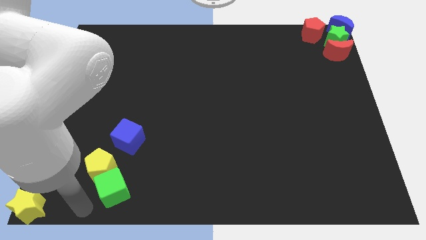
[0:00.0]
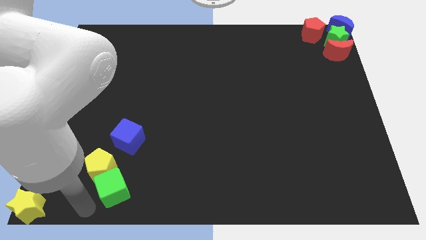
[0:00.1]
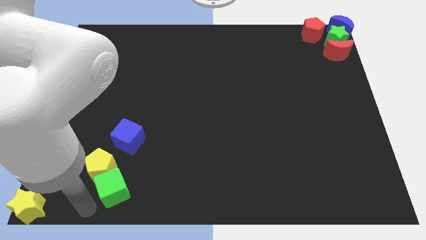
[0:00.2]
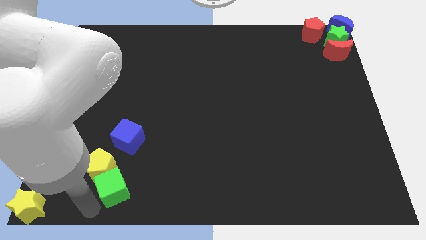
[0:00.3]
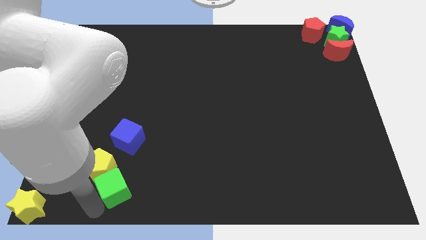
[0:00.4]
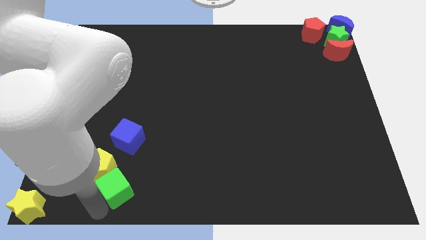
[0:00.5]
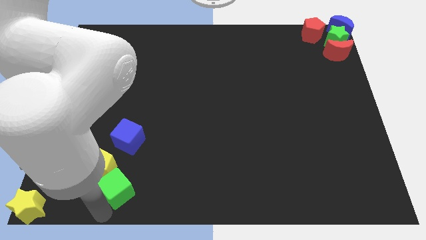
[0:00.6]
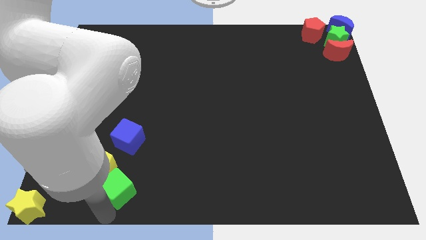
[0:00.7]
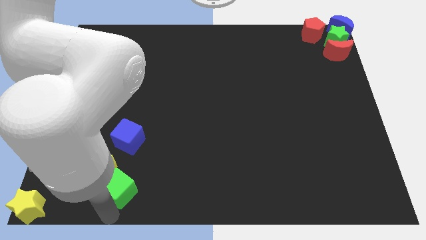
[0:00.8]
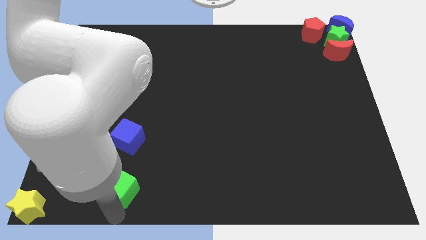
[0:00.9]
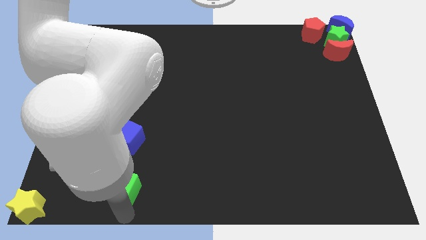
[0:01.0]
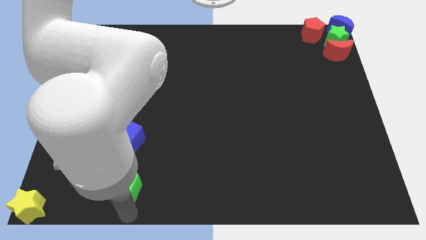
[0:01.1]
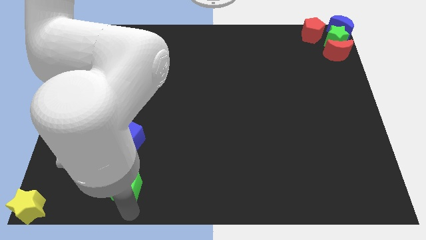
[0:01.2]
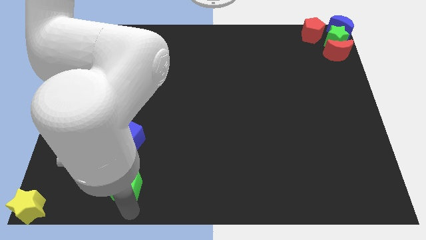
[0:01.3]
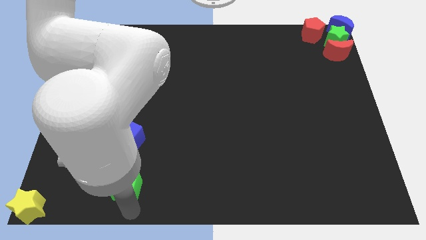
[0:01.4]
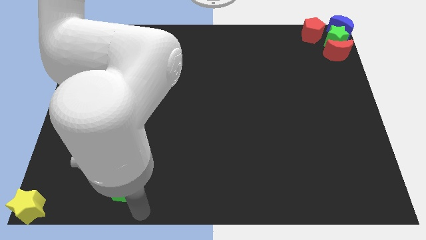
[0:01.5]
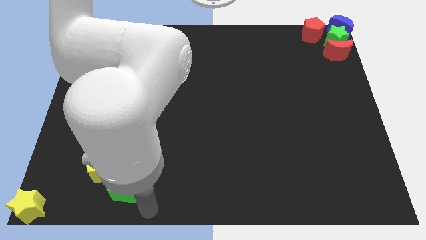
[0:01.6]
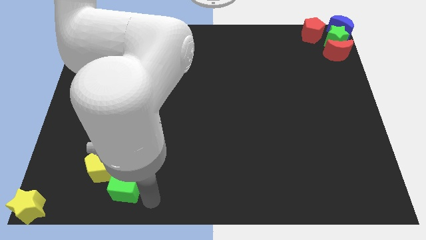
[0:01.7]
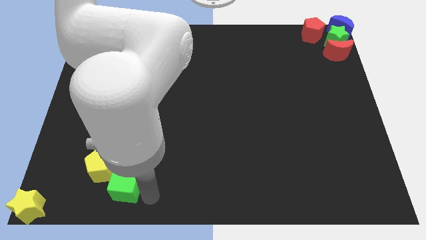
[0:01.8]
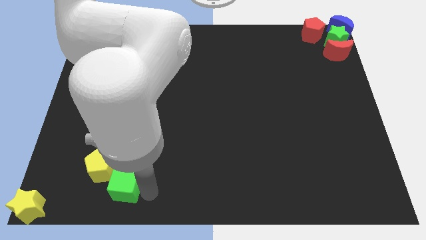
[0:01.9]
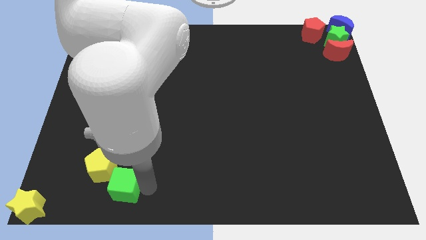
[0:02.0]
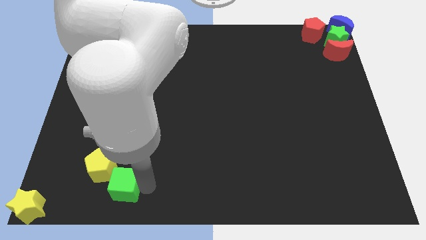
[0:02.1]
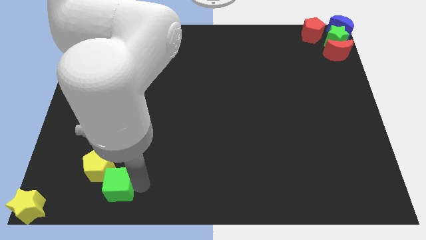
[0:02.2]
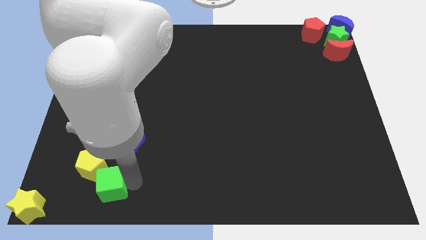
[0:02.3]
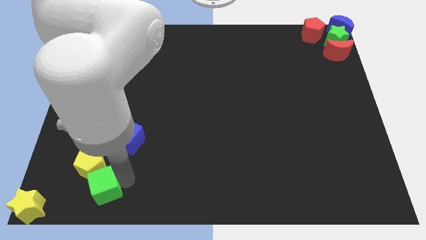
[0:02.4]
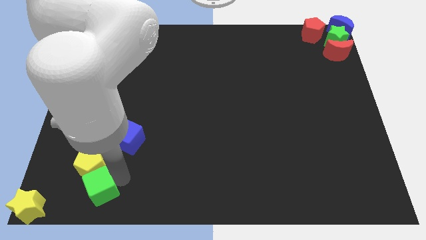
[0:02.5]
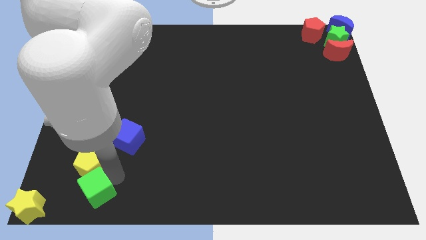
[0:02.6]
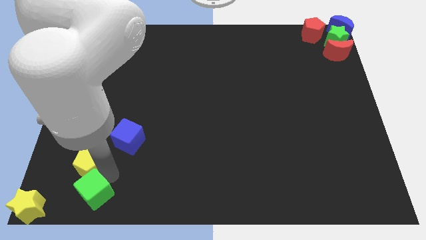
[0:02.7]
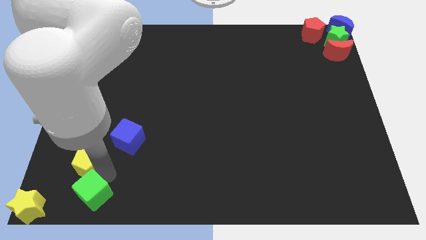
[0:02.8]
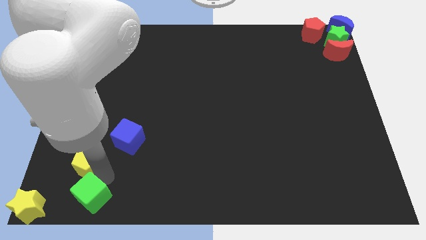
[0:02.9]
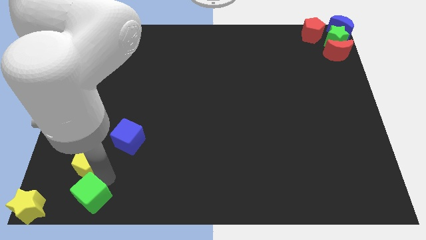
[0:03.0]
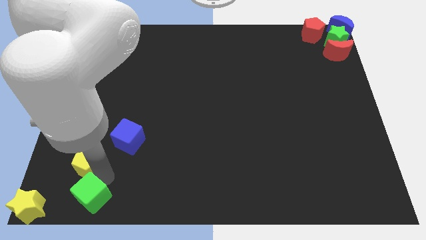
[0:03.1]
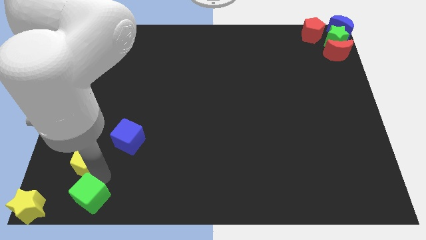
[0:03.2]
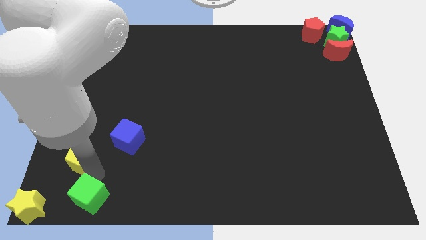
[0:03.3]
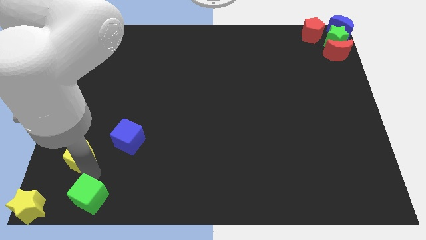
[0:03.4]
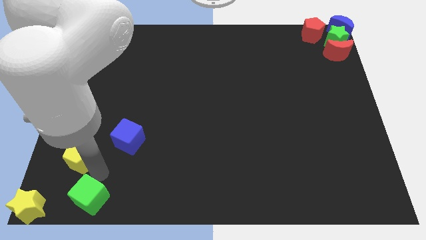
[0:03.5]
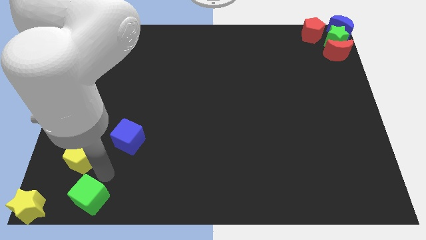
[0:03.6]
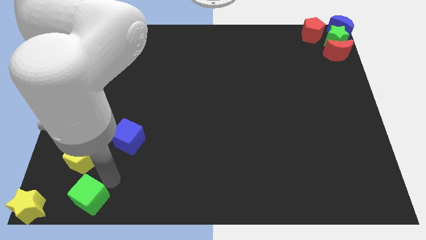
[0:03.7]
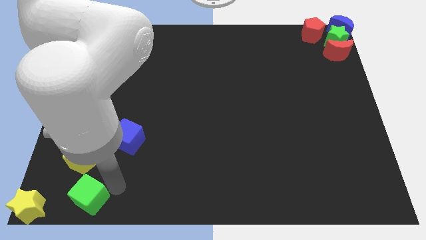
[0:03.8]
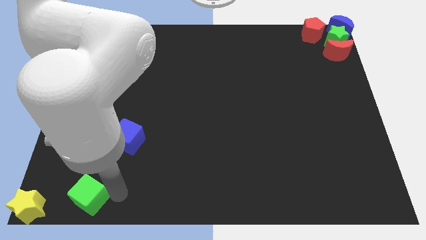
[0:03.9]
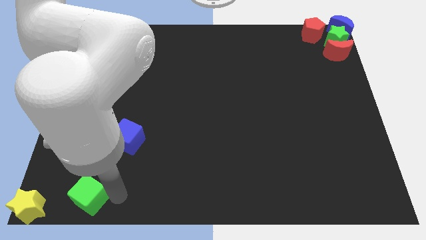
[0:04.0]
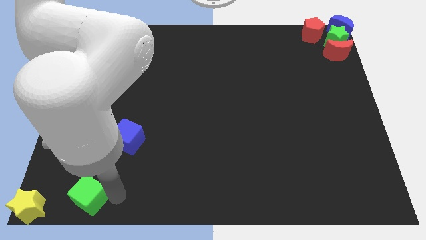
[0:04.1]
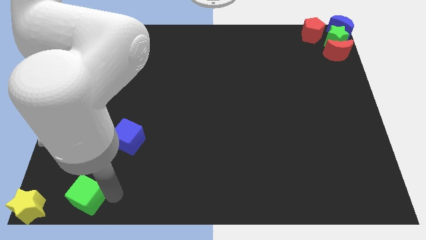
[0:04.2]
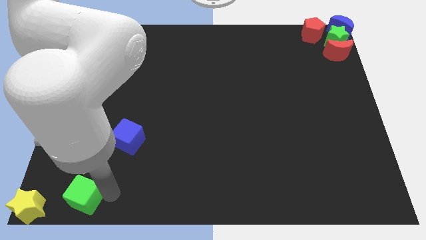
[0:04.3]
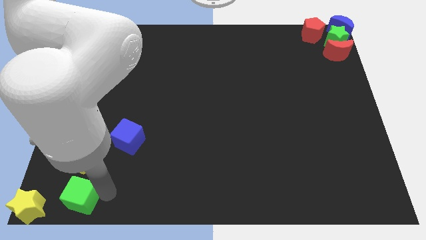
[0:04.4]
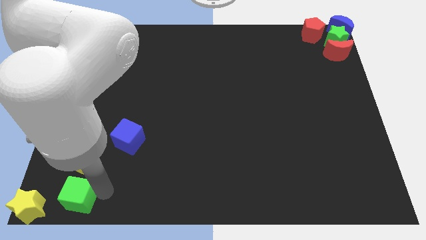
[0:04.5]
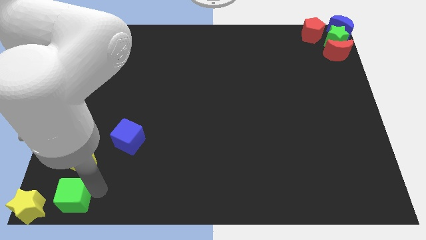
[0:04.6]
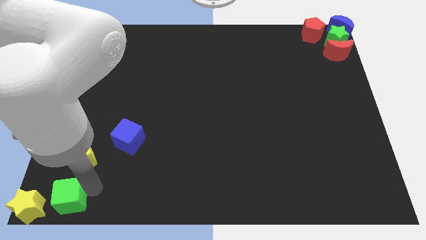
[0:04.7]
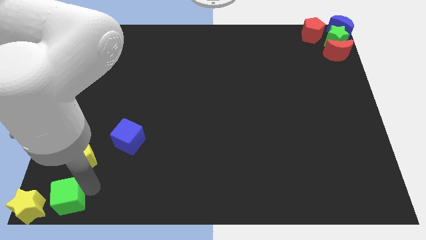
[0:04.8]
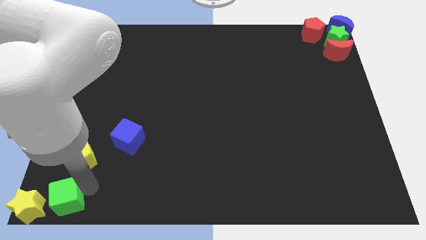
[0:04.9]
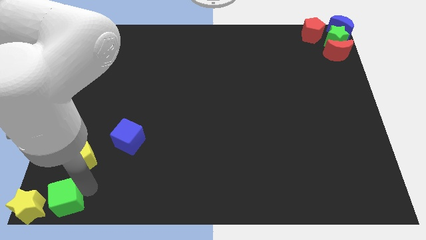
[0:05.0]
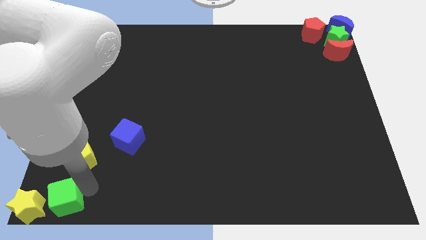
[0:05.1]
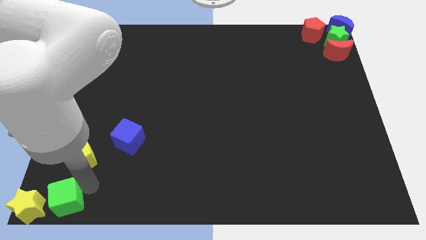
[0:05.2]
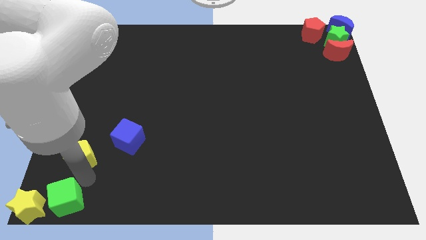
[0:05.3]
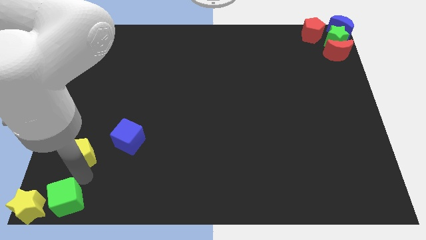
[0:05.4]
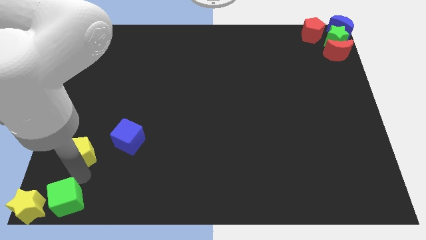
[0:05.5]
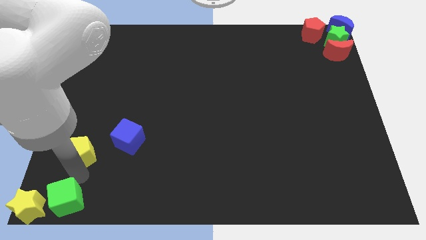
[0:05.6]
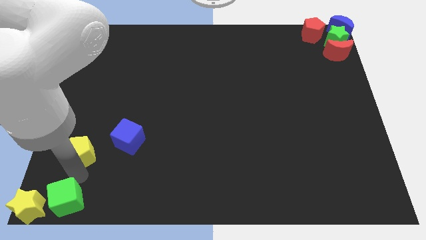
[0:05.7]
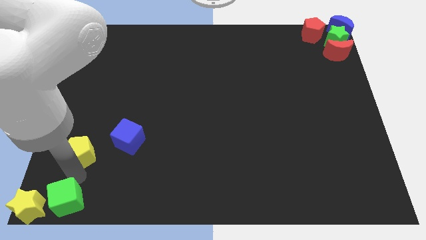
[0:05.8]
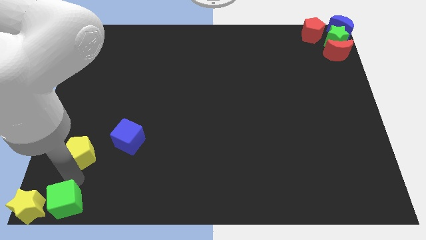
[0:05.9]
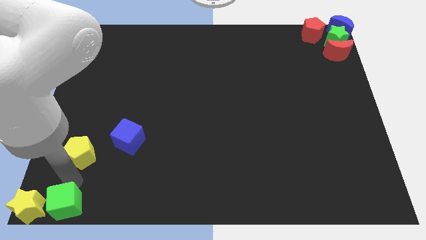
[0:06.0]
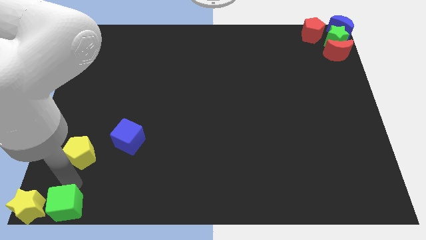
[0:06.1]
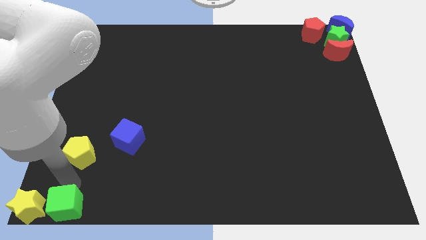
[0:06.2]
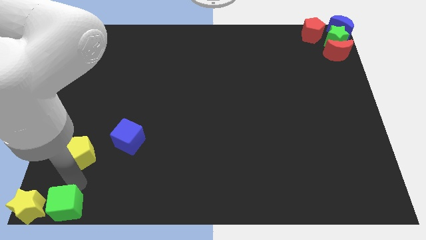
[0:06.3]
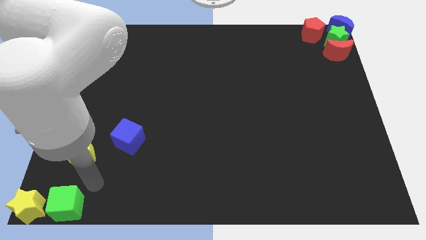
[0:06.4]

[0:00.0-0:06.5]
move the green cube right to the yellow star

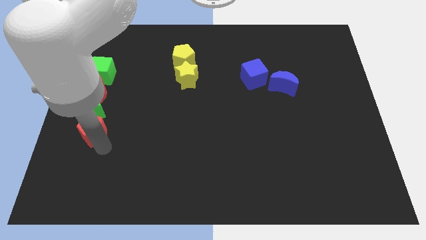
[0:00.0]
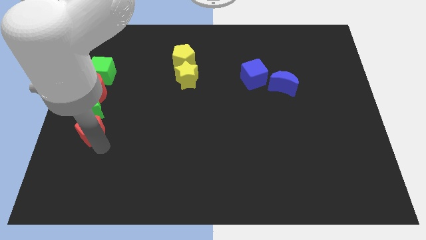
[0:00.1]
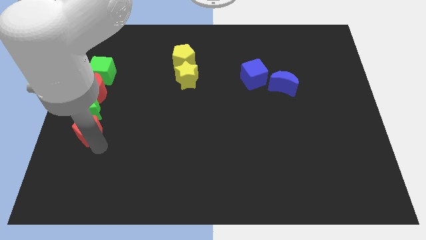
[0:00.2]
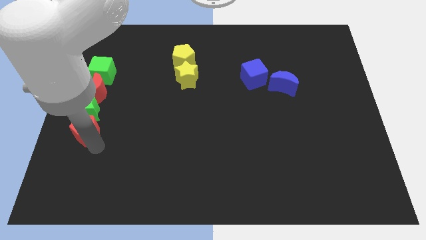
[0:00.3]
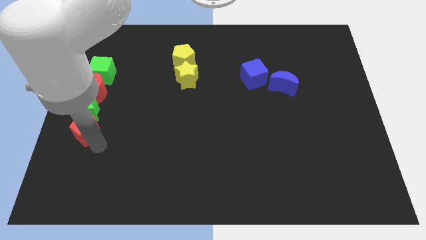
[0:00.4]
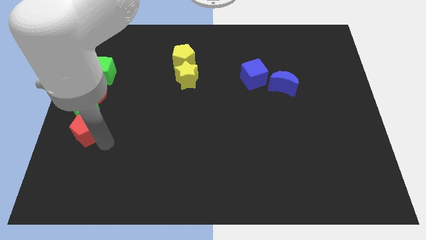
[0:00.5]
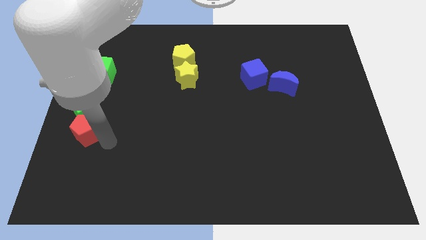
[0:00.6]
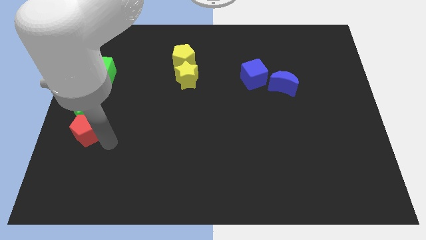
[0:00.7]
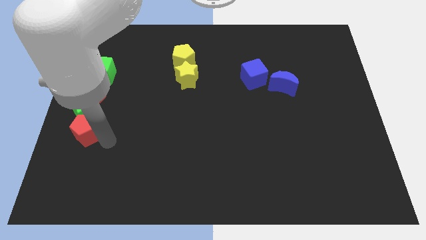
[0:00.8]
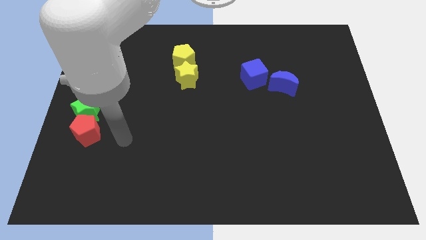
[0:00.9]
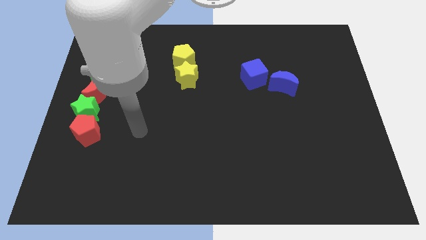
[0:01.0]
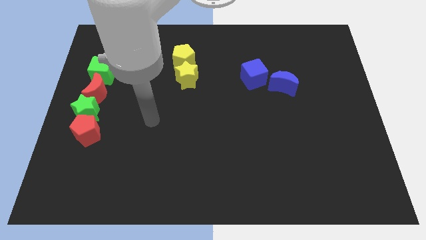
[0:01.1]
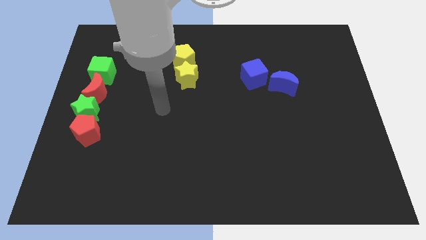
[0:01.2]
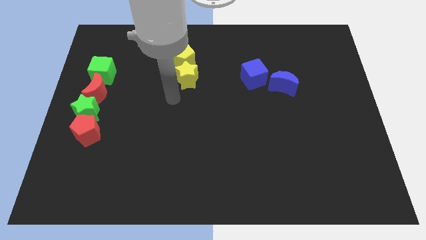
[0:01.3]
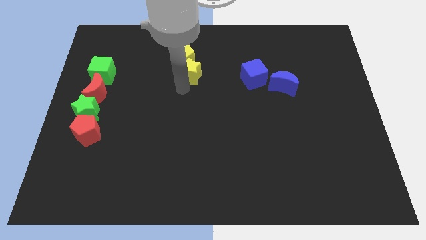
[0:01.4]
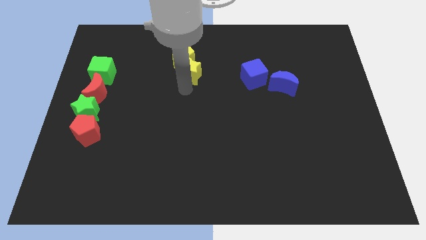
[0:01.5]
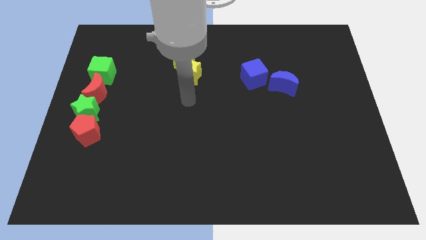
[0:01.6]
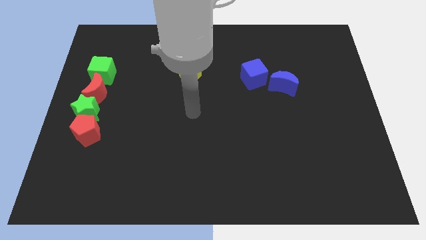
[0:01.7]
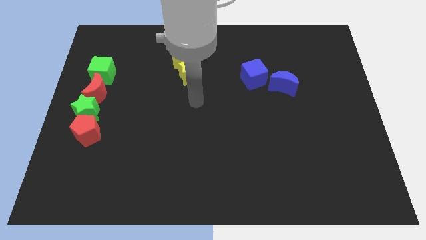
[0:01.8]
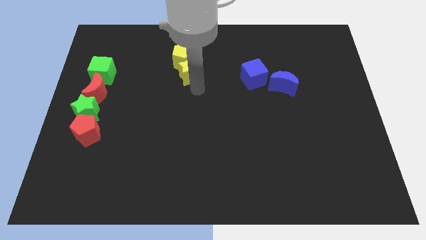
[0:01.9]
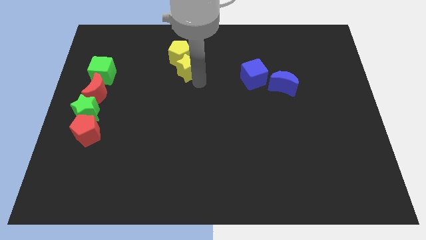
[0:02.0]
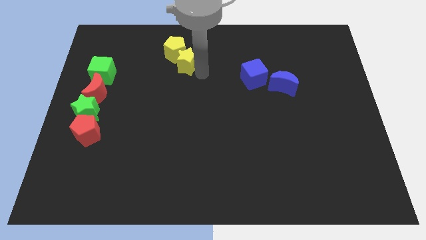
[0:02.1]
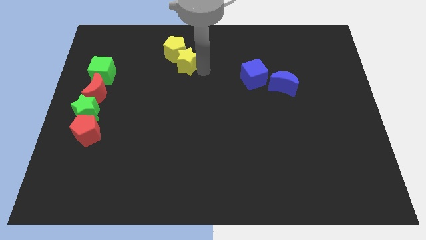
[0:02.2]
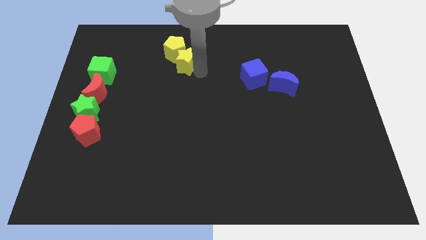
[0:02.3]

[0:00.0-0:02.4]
push yellow star slightly upwards
